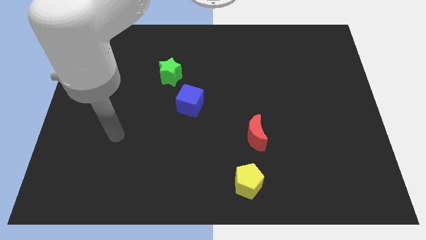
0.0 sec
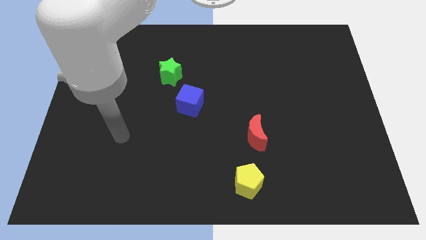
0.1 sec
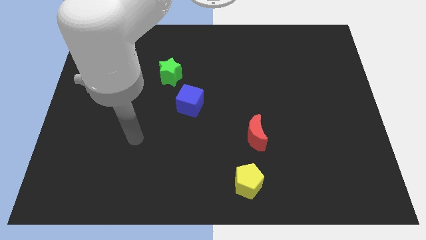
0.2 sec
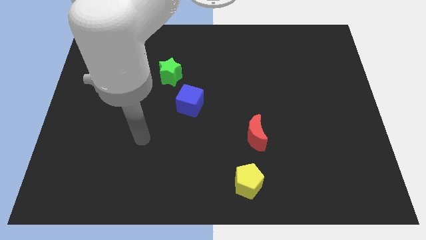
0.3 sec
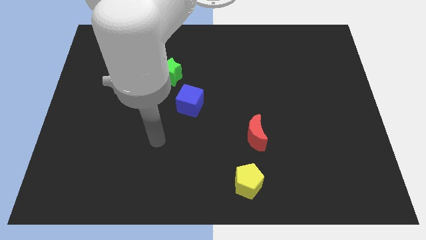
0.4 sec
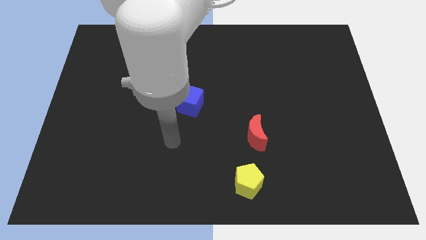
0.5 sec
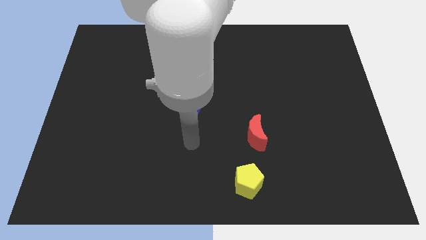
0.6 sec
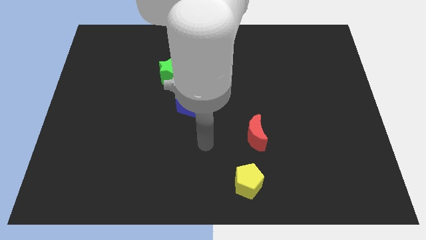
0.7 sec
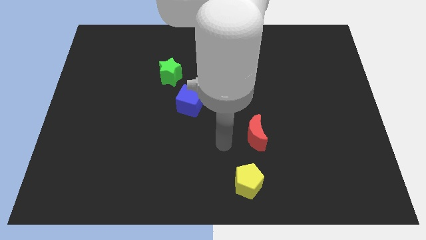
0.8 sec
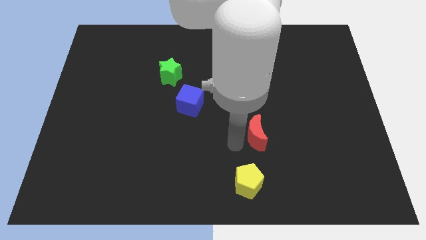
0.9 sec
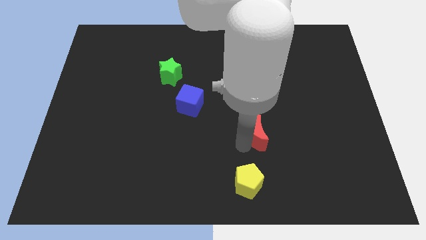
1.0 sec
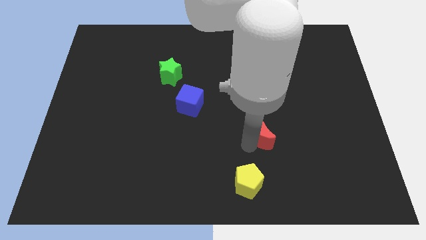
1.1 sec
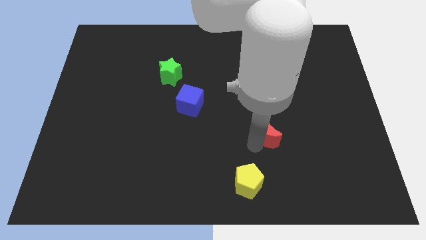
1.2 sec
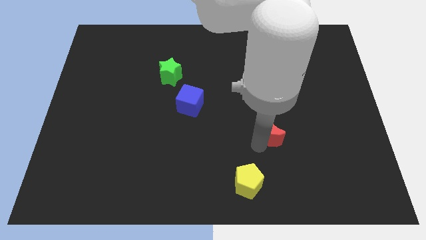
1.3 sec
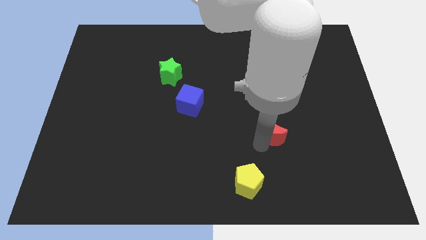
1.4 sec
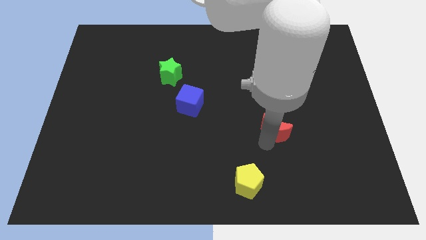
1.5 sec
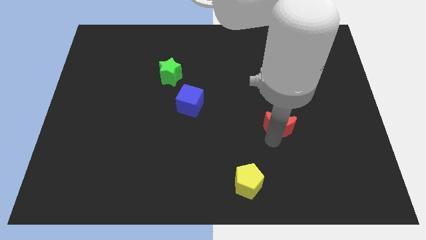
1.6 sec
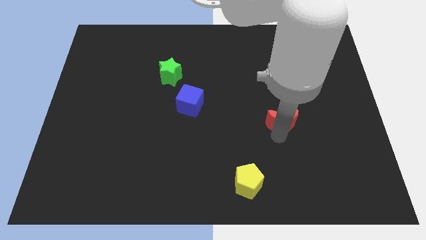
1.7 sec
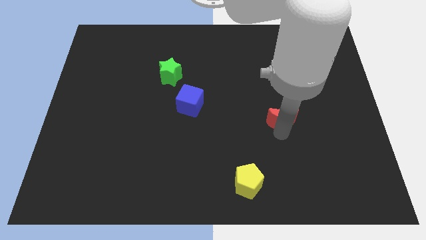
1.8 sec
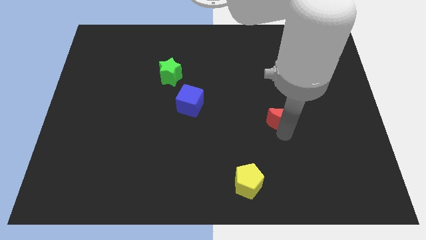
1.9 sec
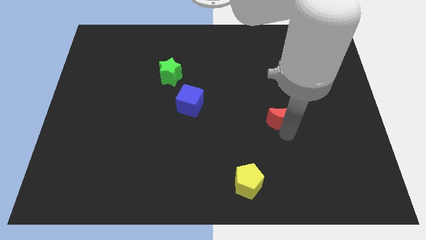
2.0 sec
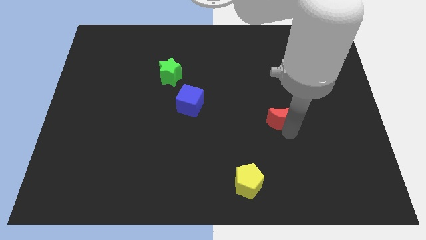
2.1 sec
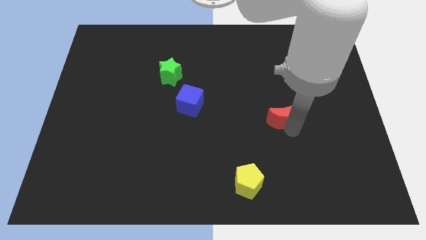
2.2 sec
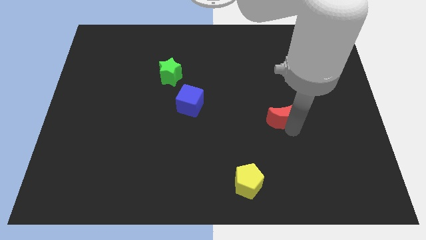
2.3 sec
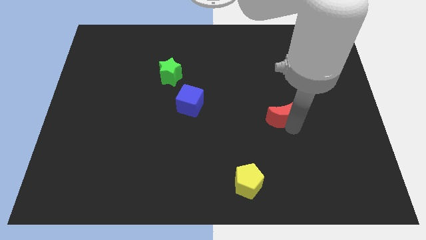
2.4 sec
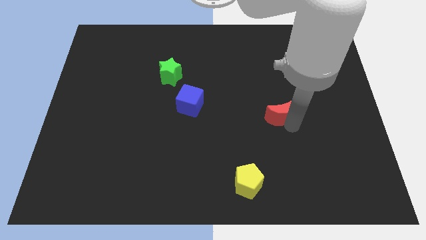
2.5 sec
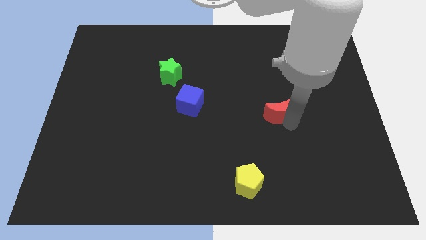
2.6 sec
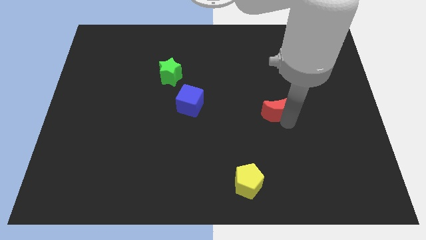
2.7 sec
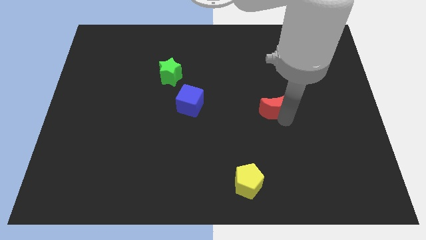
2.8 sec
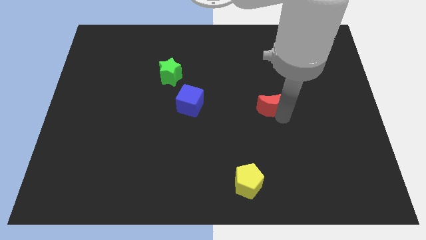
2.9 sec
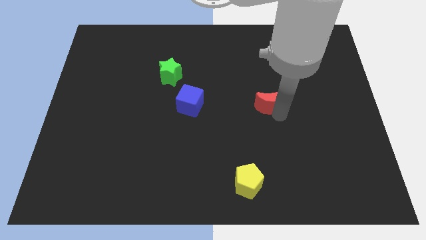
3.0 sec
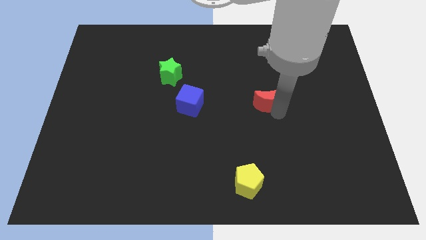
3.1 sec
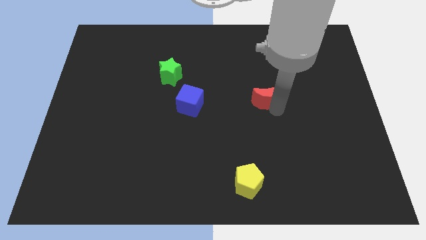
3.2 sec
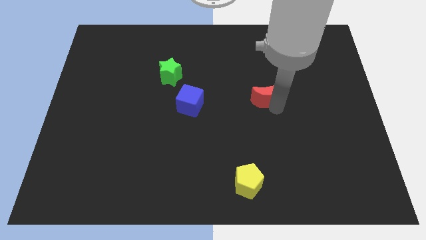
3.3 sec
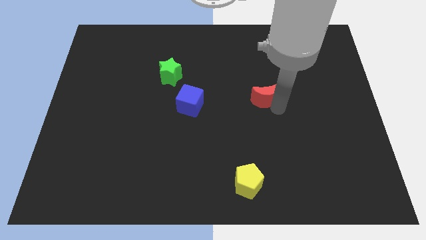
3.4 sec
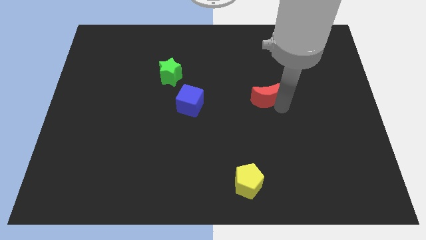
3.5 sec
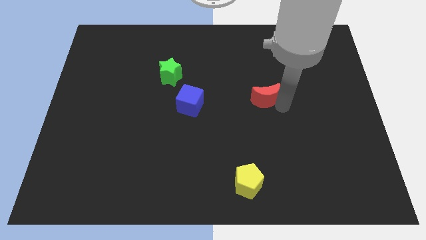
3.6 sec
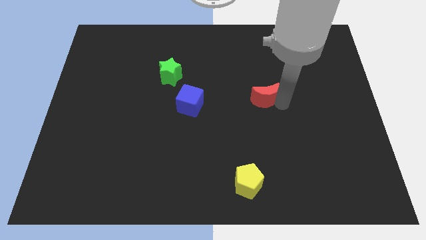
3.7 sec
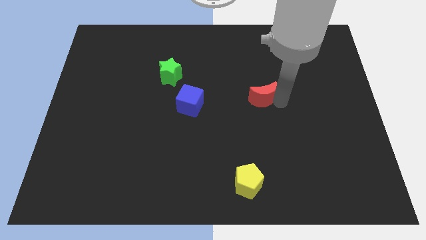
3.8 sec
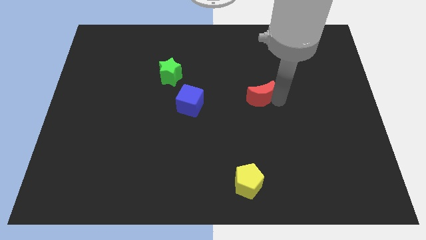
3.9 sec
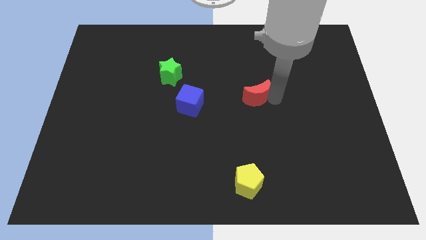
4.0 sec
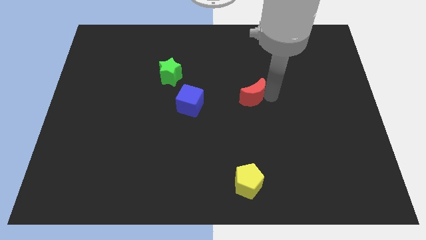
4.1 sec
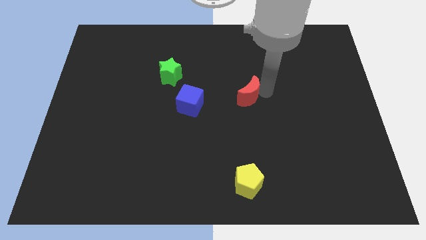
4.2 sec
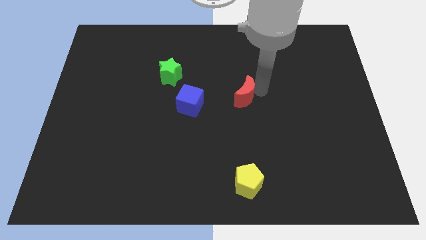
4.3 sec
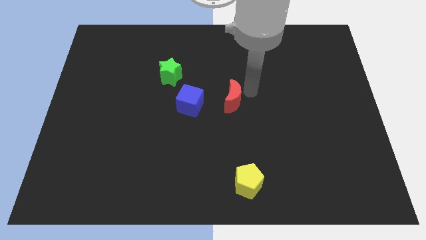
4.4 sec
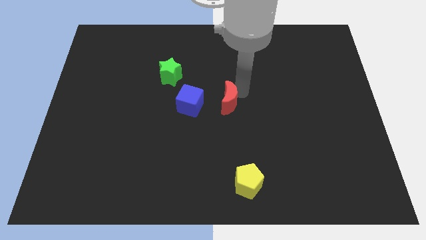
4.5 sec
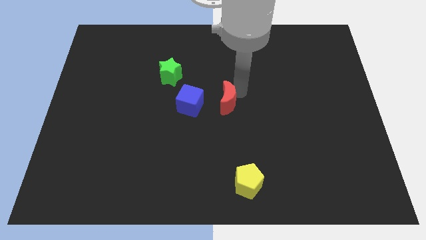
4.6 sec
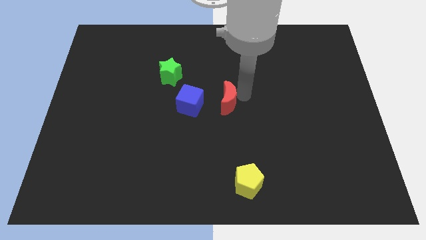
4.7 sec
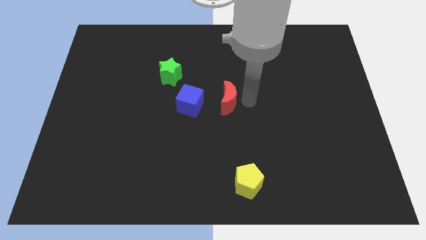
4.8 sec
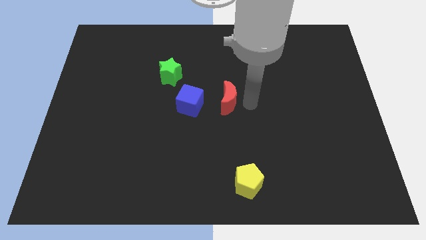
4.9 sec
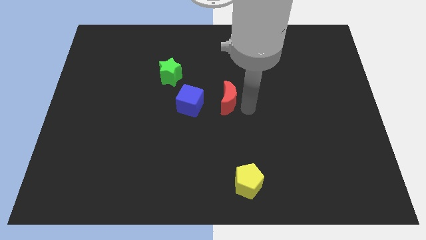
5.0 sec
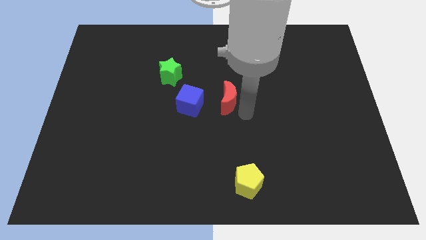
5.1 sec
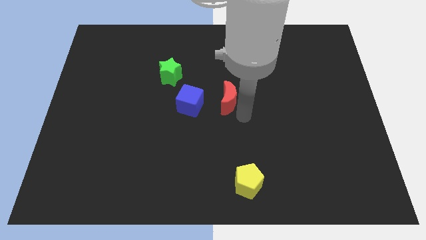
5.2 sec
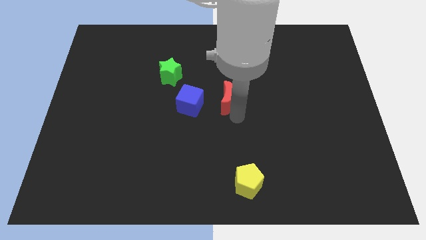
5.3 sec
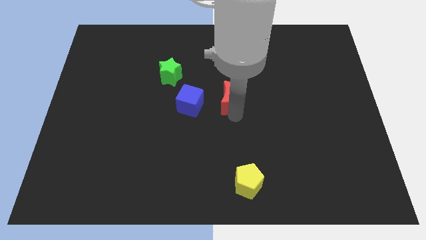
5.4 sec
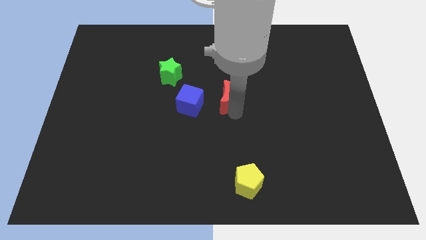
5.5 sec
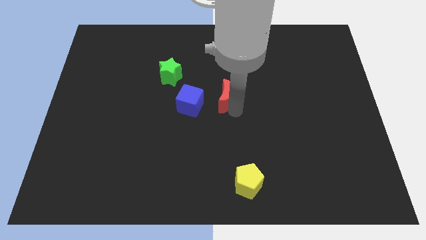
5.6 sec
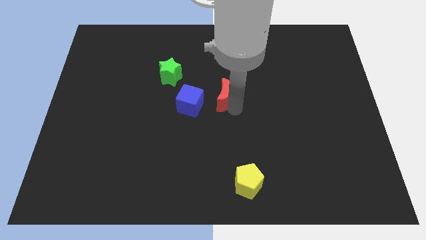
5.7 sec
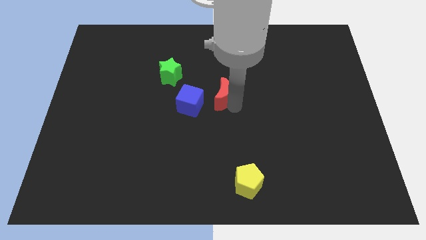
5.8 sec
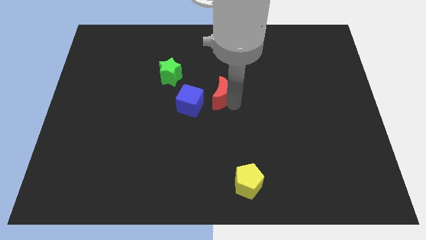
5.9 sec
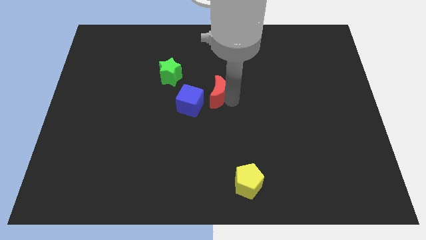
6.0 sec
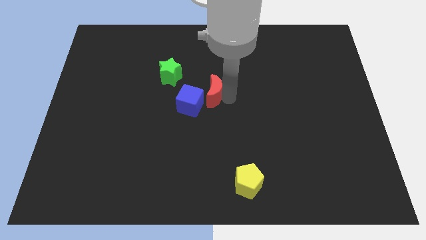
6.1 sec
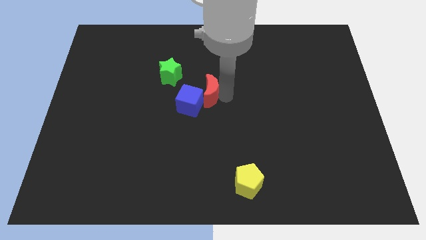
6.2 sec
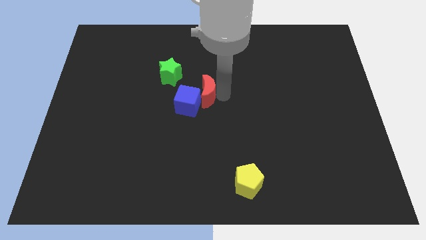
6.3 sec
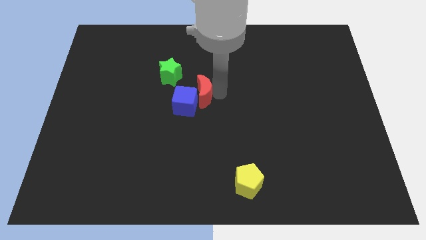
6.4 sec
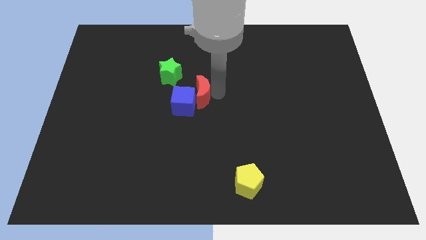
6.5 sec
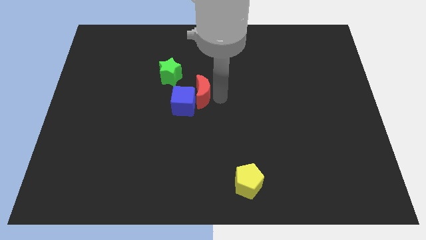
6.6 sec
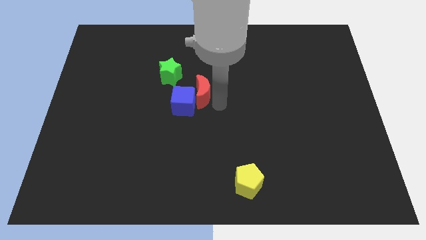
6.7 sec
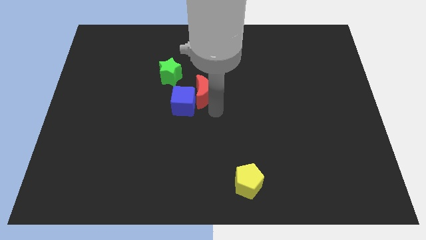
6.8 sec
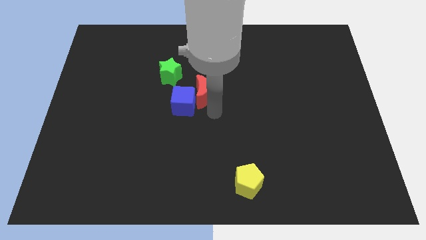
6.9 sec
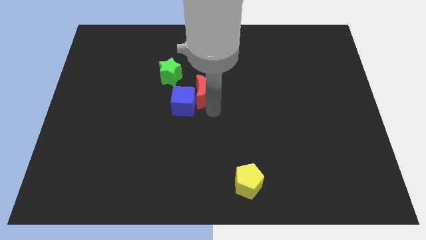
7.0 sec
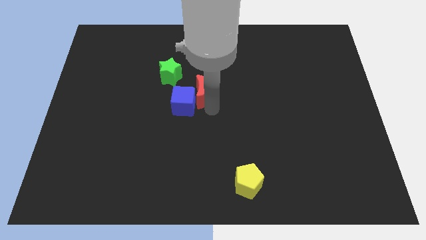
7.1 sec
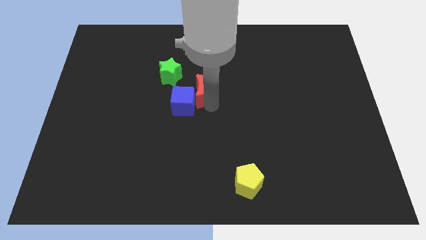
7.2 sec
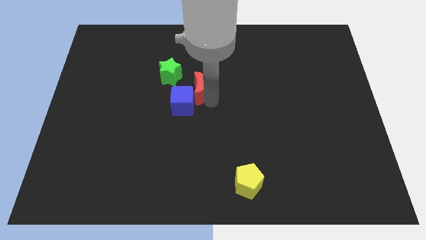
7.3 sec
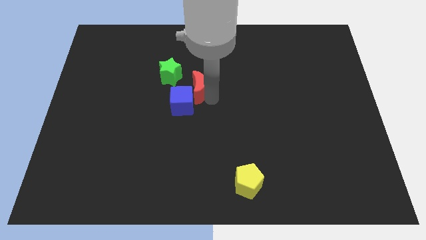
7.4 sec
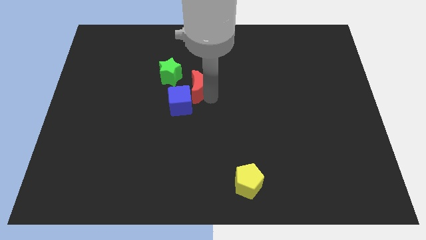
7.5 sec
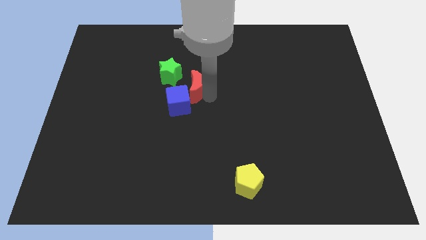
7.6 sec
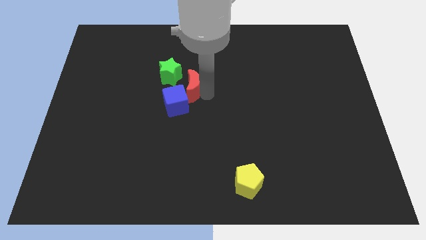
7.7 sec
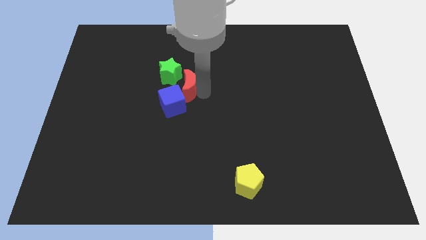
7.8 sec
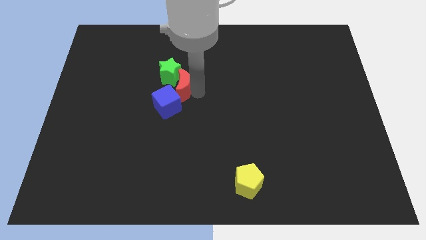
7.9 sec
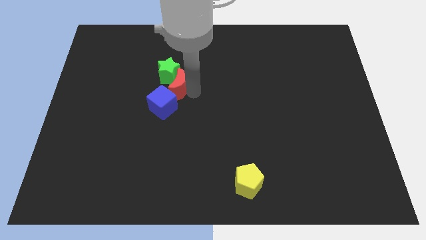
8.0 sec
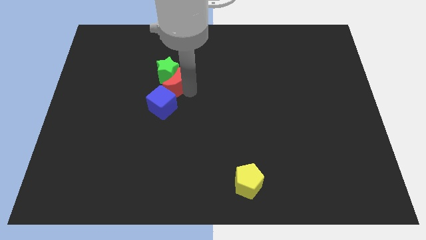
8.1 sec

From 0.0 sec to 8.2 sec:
put the moon to the green block
